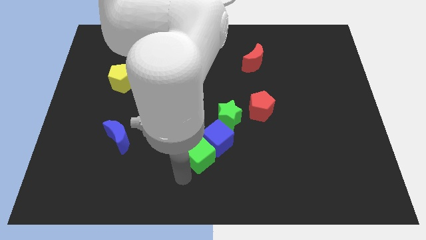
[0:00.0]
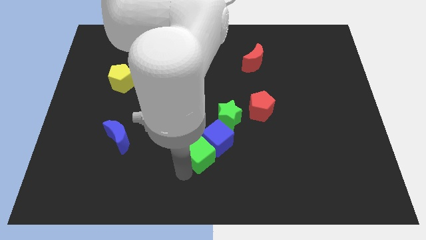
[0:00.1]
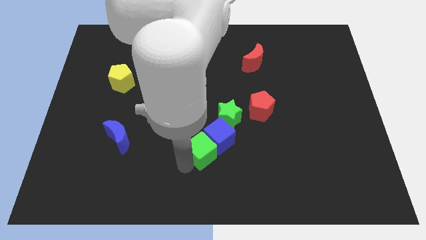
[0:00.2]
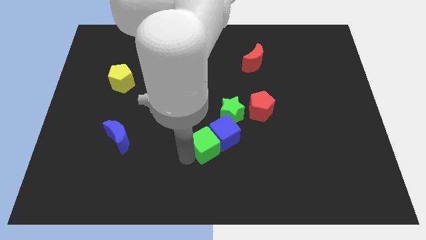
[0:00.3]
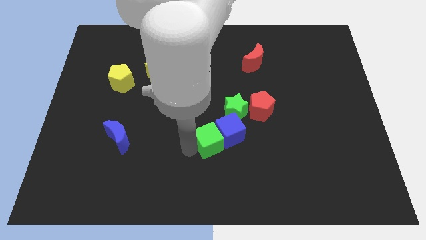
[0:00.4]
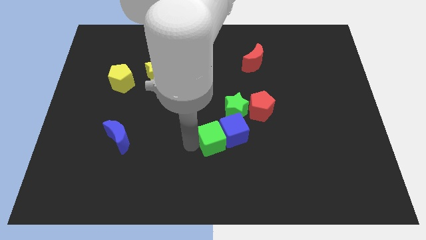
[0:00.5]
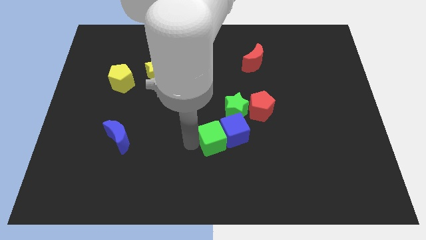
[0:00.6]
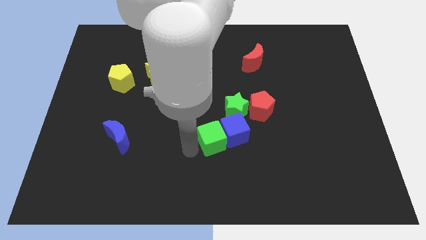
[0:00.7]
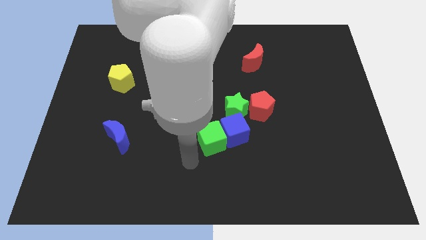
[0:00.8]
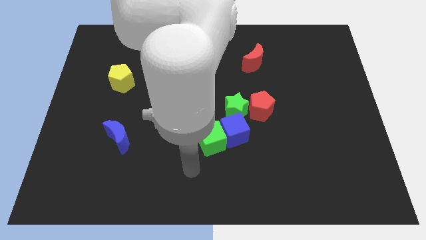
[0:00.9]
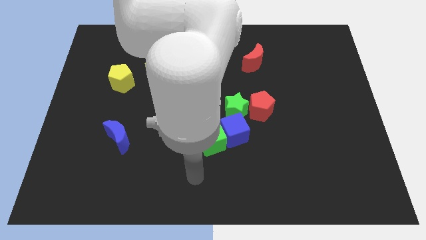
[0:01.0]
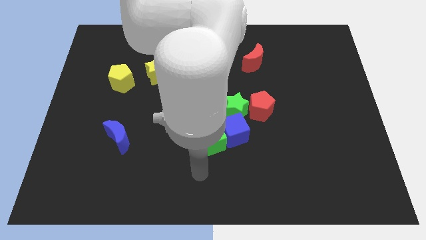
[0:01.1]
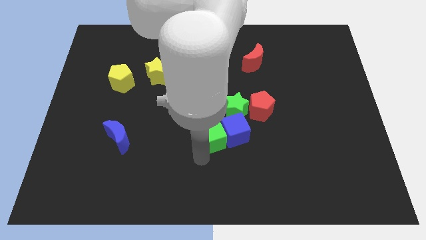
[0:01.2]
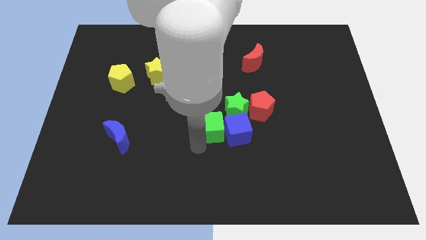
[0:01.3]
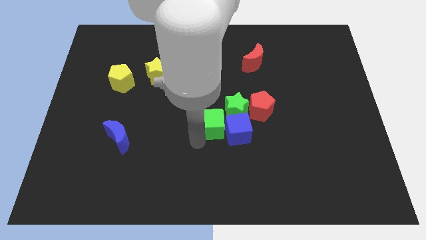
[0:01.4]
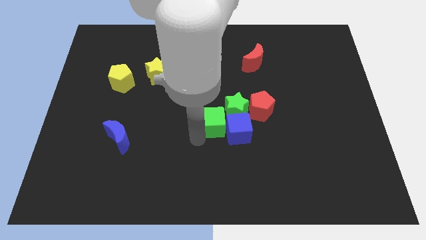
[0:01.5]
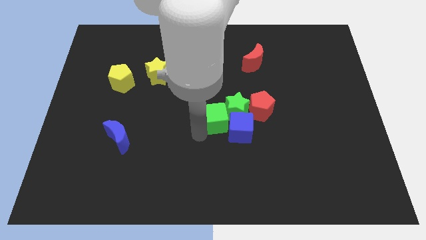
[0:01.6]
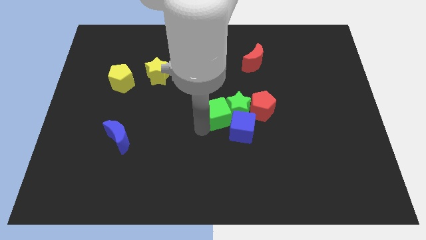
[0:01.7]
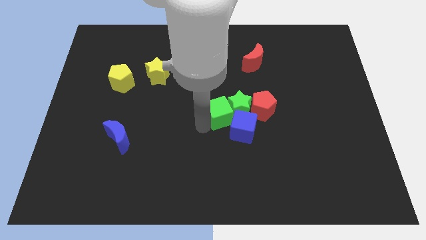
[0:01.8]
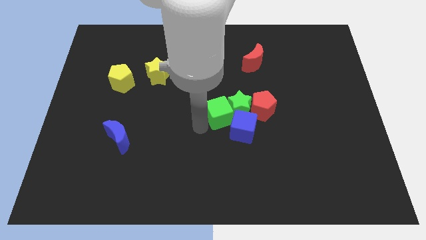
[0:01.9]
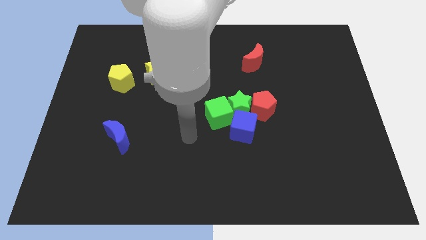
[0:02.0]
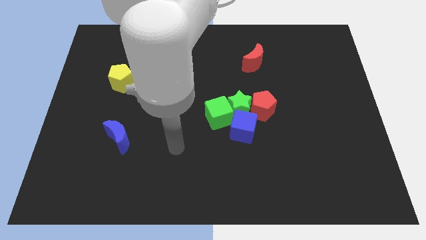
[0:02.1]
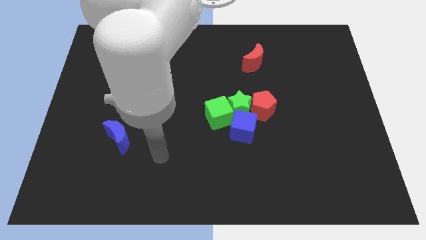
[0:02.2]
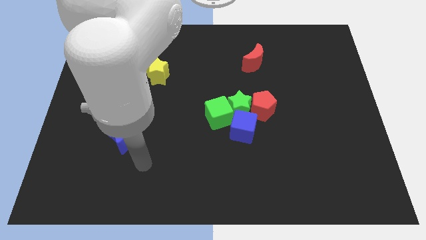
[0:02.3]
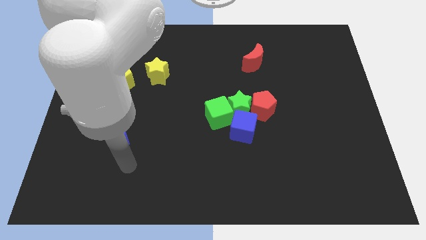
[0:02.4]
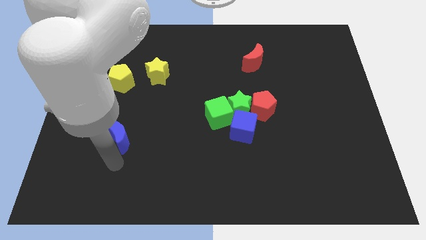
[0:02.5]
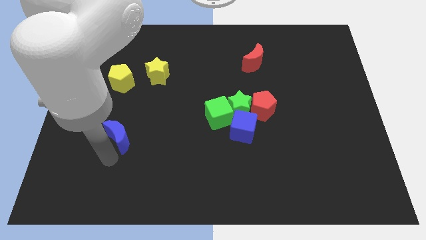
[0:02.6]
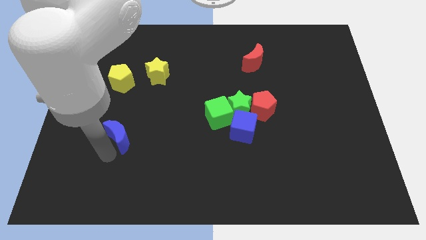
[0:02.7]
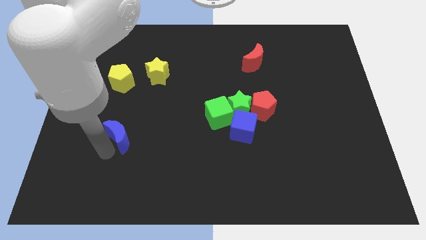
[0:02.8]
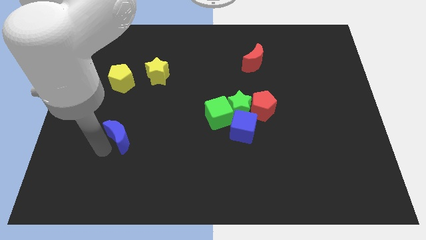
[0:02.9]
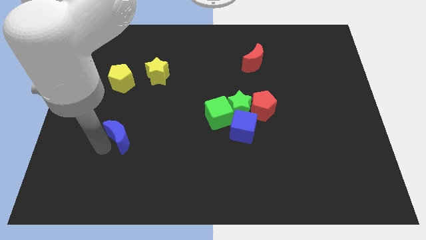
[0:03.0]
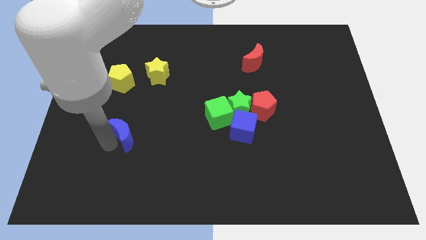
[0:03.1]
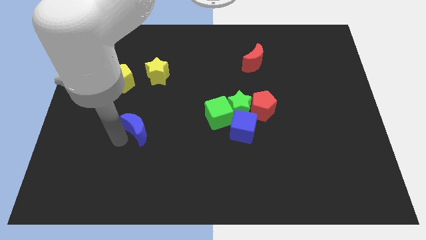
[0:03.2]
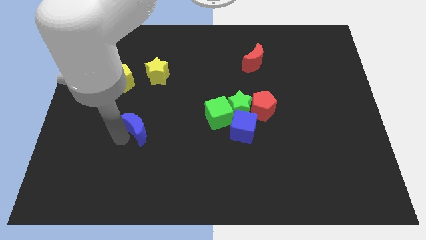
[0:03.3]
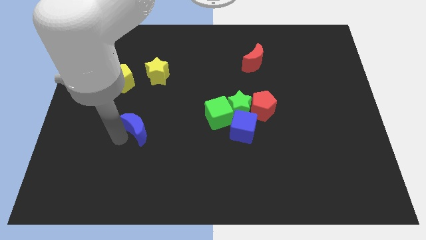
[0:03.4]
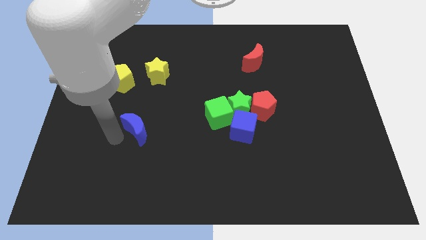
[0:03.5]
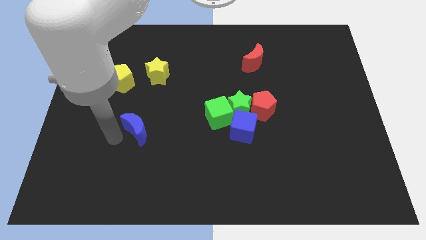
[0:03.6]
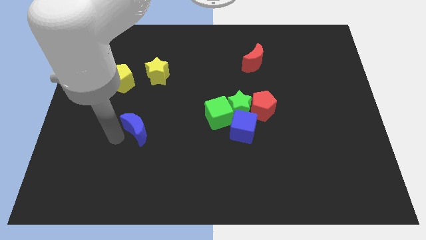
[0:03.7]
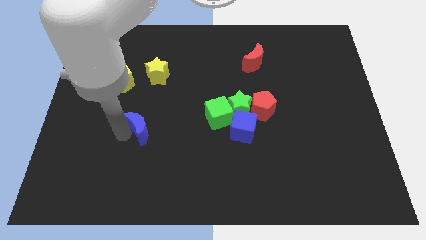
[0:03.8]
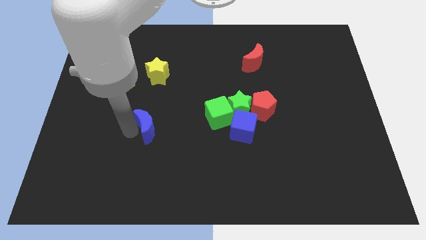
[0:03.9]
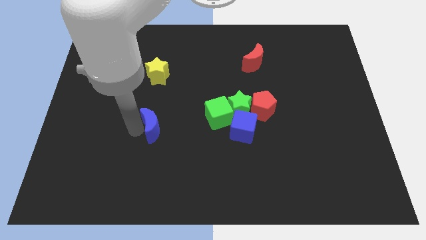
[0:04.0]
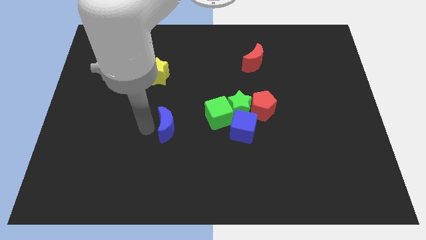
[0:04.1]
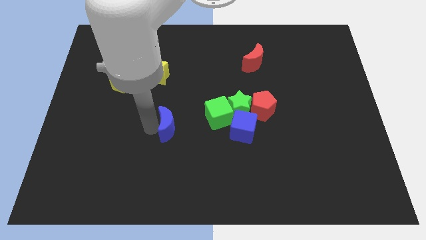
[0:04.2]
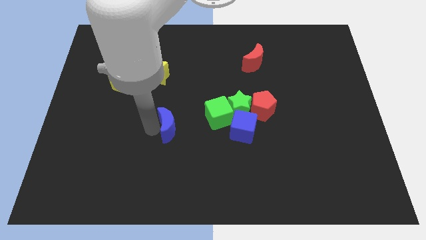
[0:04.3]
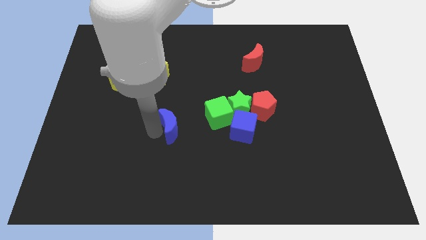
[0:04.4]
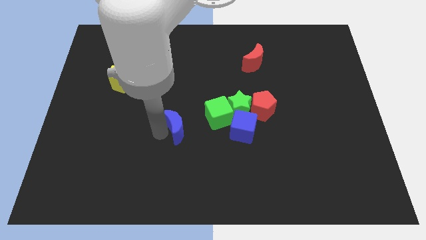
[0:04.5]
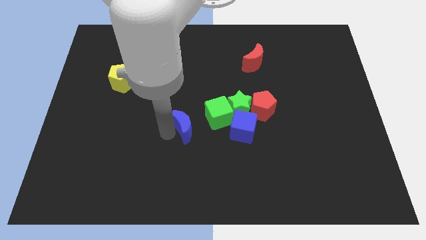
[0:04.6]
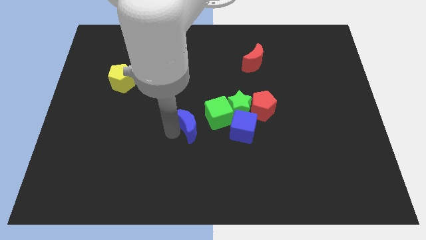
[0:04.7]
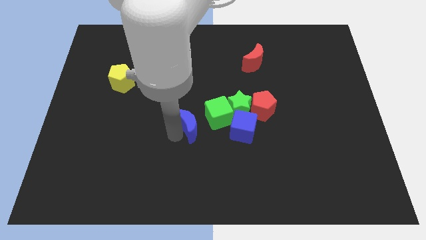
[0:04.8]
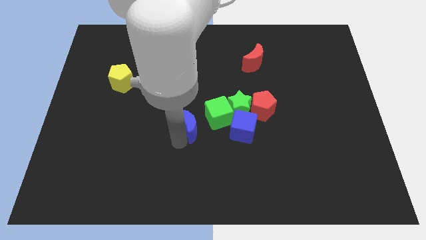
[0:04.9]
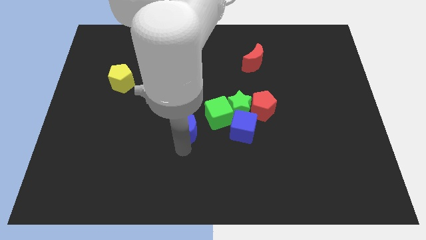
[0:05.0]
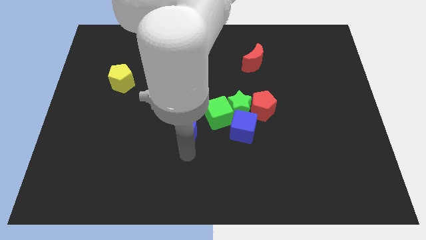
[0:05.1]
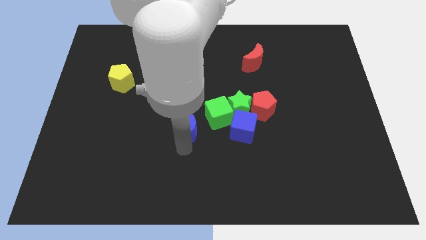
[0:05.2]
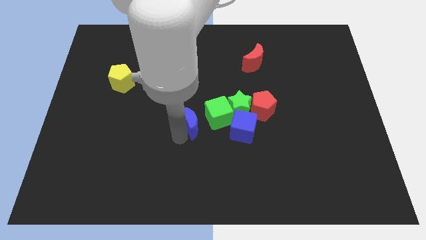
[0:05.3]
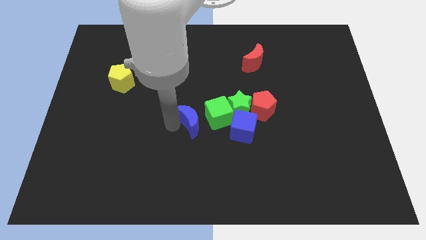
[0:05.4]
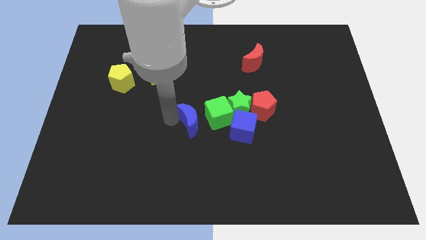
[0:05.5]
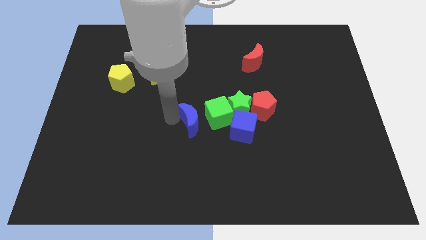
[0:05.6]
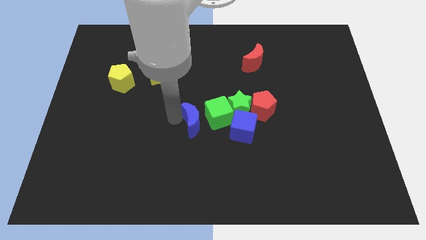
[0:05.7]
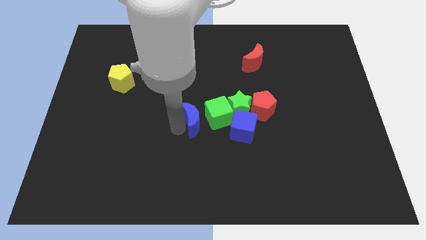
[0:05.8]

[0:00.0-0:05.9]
push the red pentagon blue and green blocks towards the center of the board

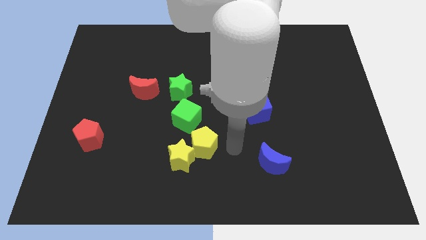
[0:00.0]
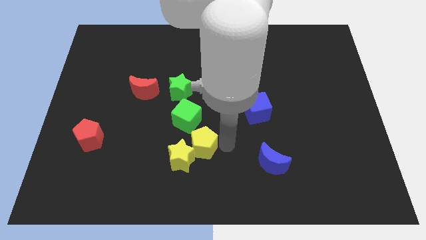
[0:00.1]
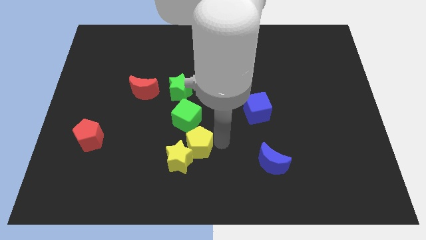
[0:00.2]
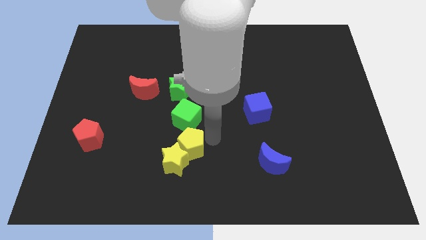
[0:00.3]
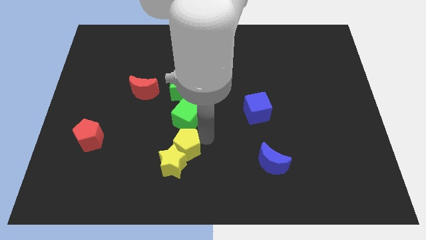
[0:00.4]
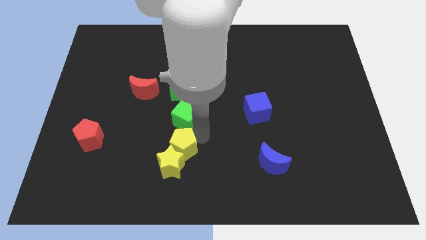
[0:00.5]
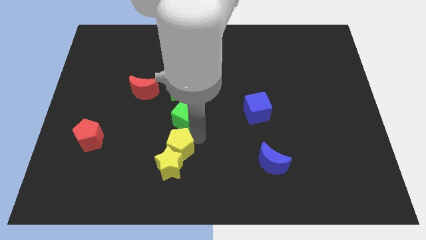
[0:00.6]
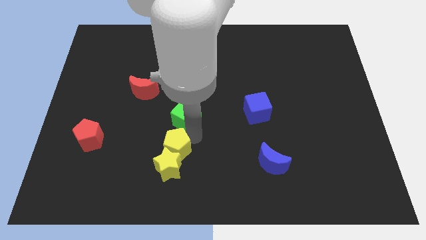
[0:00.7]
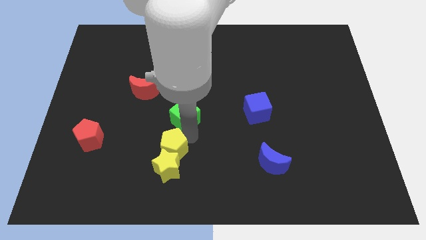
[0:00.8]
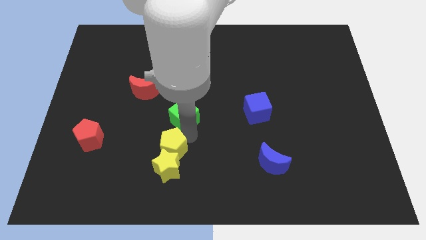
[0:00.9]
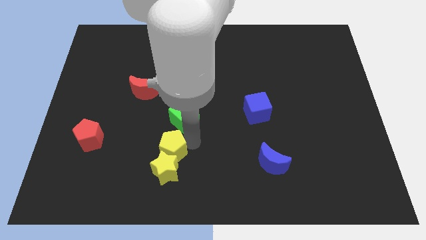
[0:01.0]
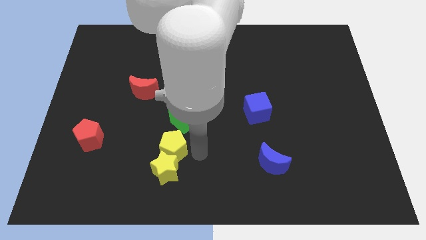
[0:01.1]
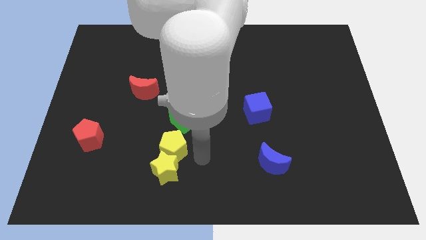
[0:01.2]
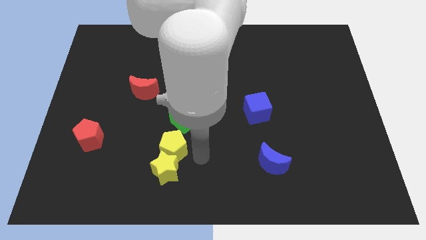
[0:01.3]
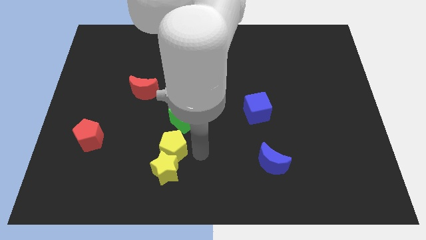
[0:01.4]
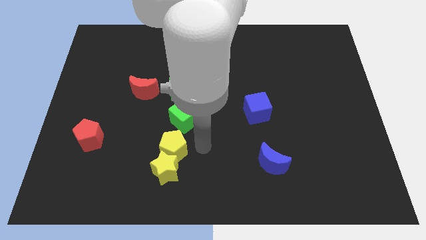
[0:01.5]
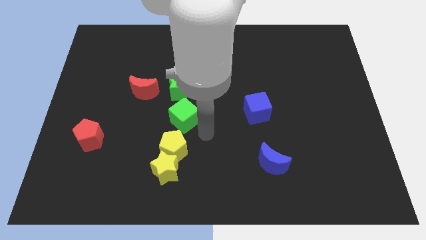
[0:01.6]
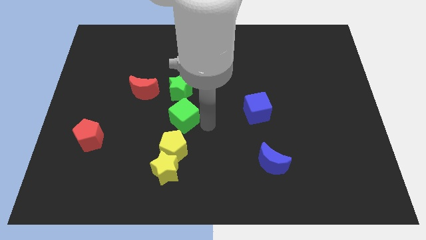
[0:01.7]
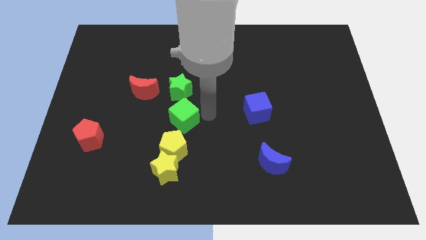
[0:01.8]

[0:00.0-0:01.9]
push the yellow pentagon along with the yellow star to the bottom left side of the green cube

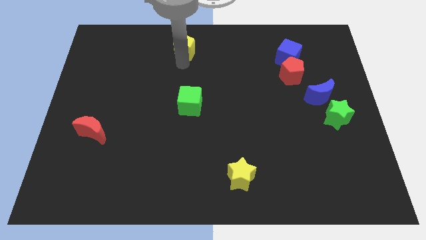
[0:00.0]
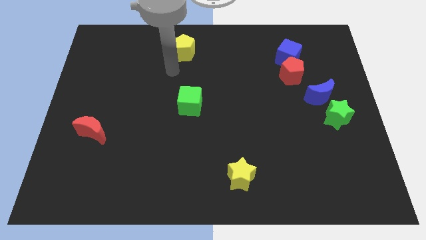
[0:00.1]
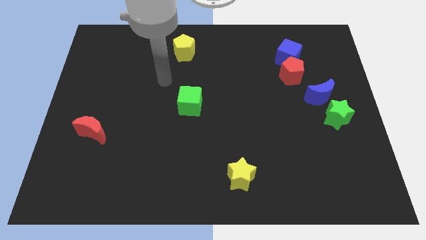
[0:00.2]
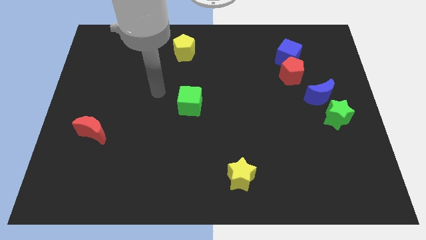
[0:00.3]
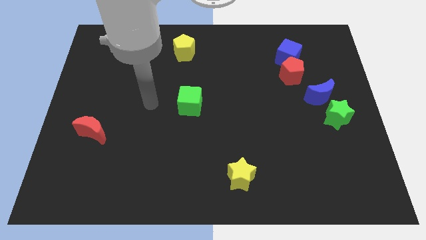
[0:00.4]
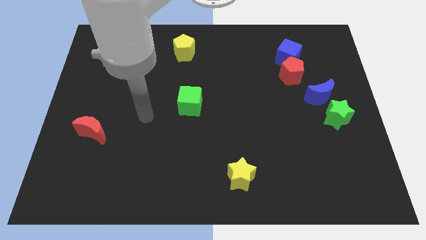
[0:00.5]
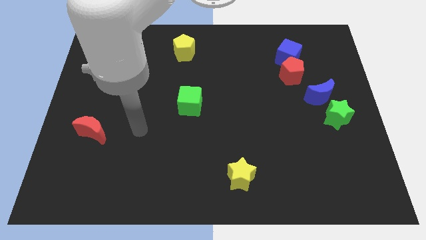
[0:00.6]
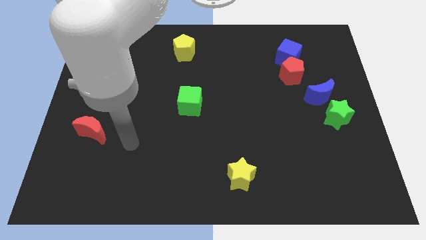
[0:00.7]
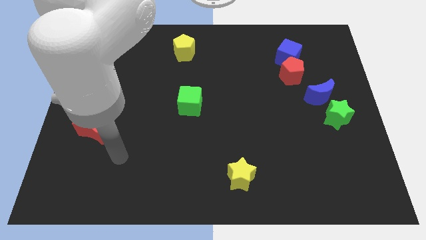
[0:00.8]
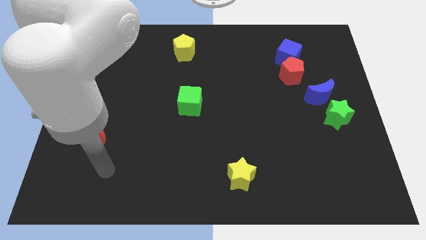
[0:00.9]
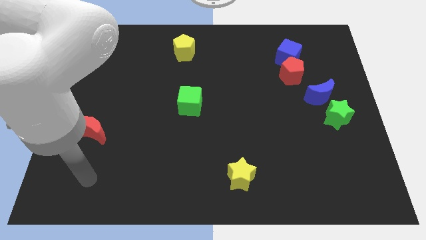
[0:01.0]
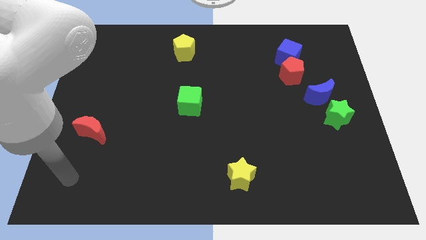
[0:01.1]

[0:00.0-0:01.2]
go away from the yellow pentagon
